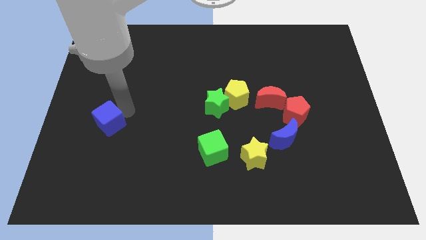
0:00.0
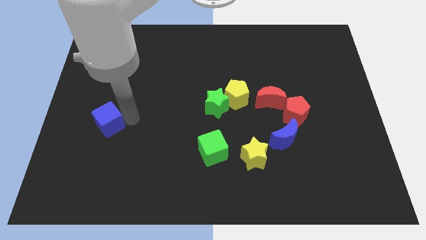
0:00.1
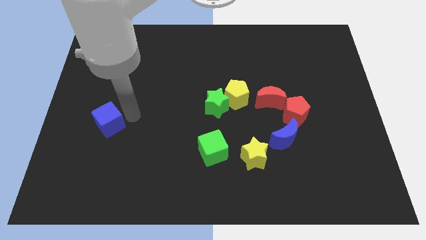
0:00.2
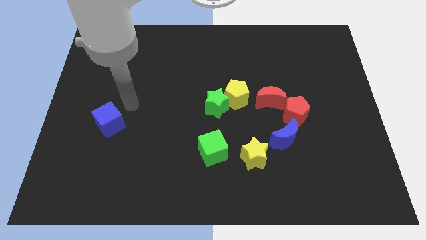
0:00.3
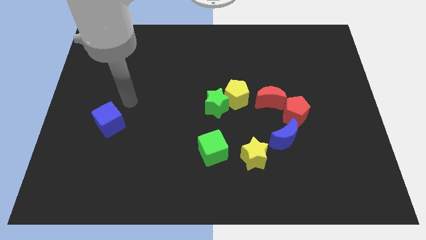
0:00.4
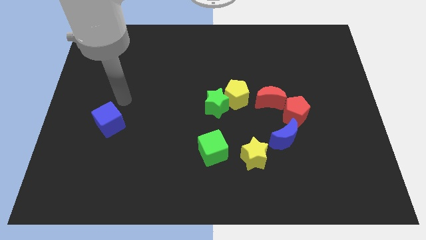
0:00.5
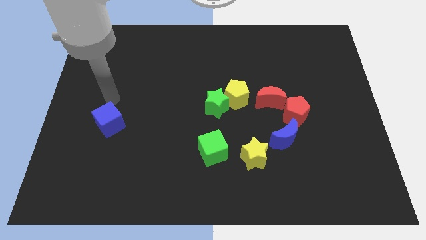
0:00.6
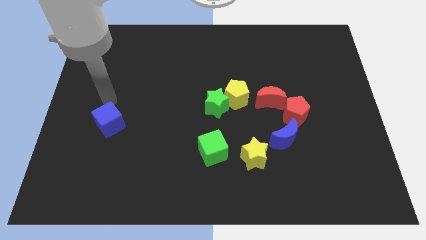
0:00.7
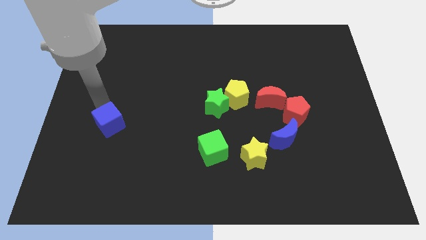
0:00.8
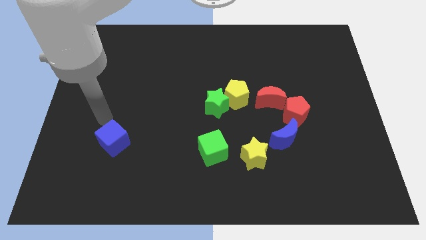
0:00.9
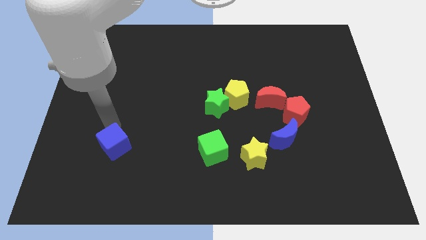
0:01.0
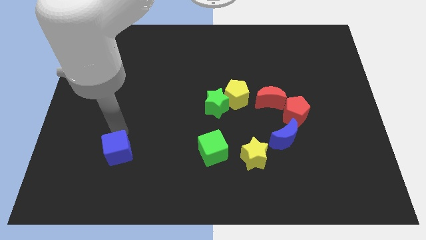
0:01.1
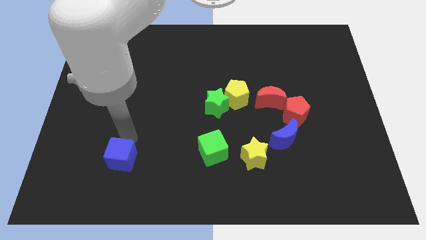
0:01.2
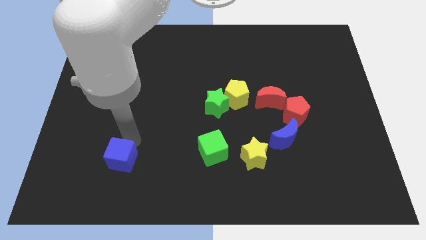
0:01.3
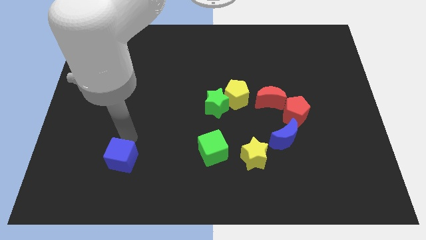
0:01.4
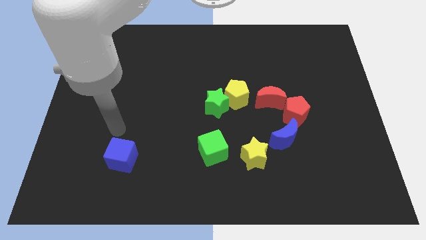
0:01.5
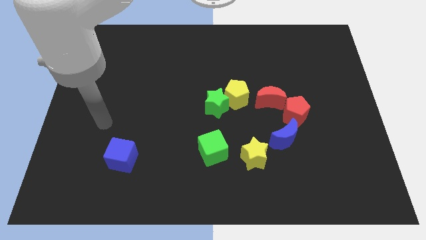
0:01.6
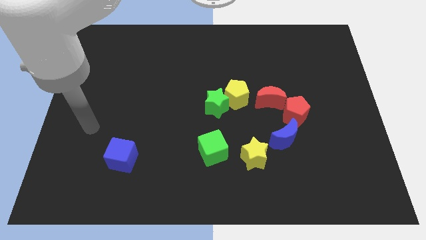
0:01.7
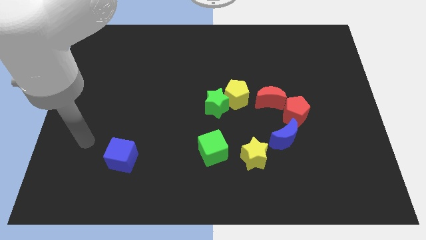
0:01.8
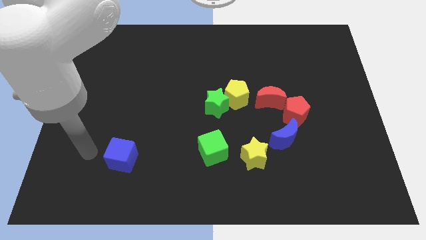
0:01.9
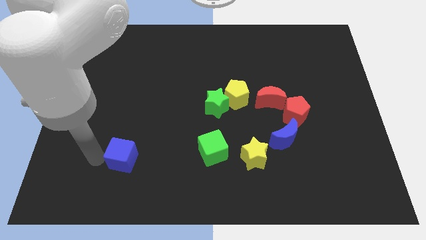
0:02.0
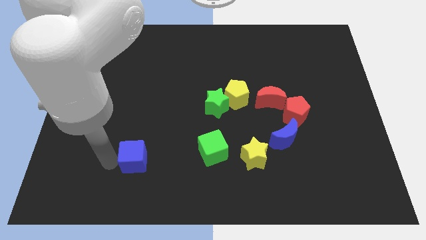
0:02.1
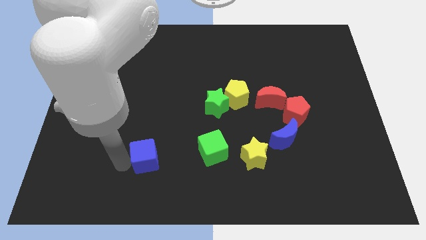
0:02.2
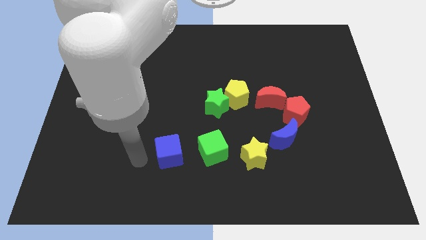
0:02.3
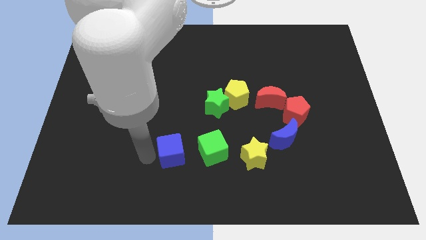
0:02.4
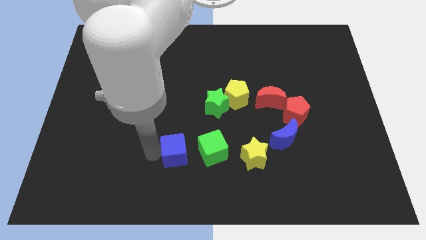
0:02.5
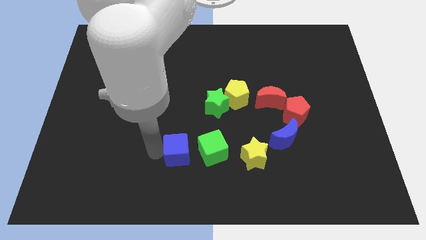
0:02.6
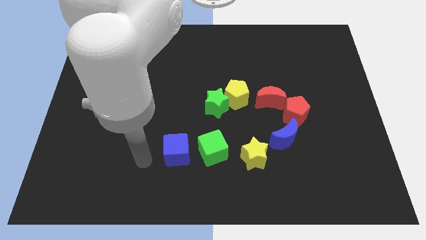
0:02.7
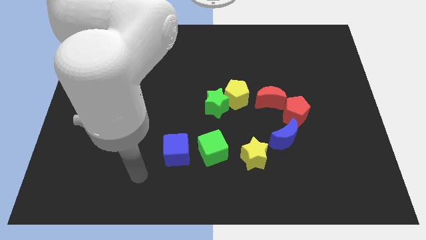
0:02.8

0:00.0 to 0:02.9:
push the blue cube towards left to the green cube

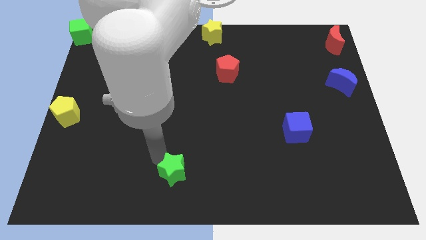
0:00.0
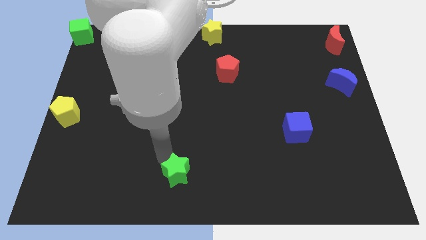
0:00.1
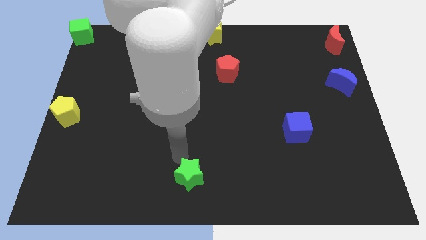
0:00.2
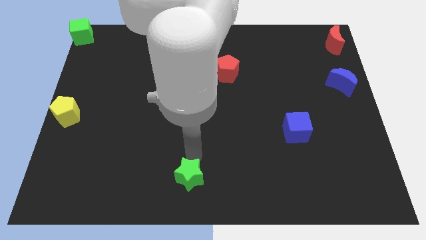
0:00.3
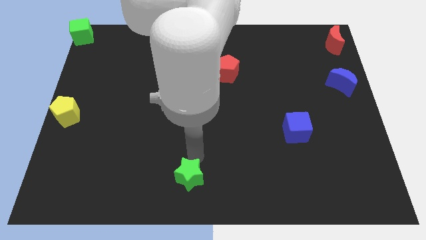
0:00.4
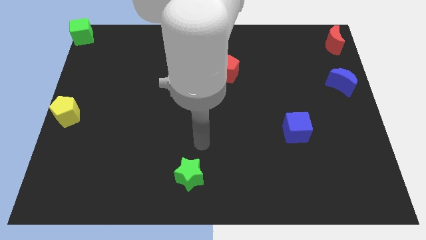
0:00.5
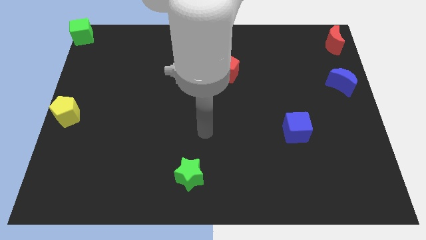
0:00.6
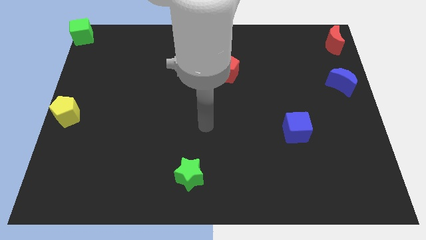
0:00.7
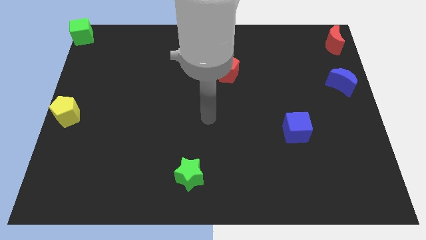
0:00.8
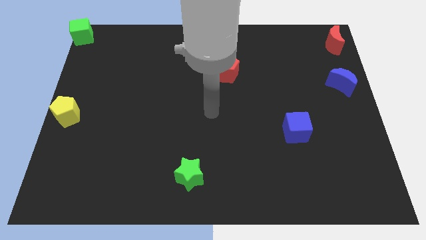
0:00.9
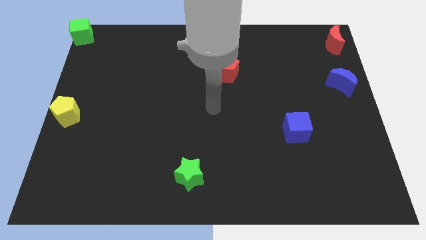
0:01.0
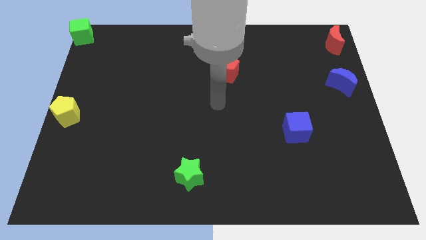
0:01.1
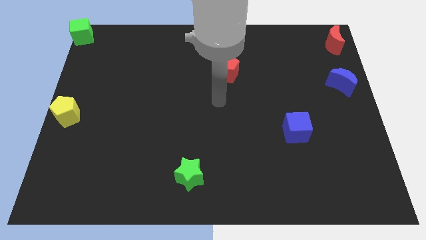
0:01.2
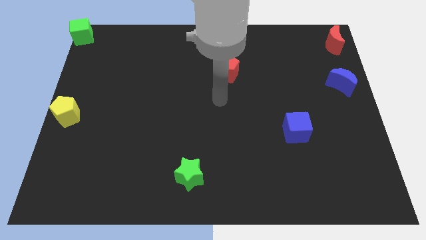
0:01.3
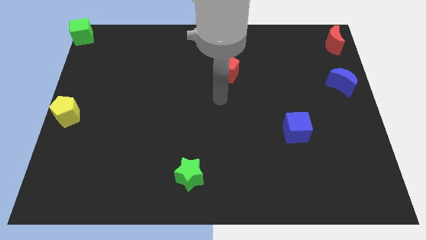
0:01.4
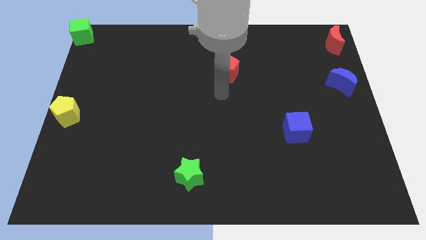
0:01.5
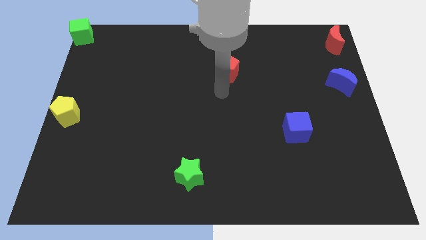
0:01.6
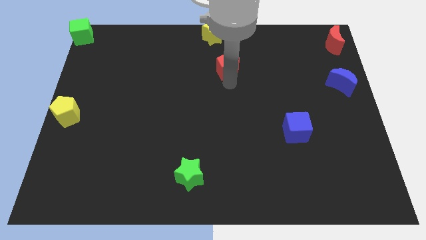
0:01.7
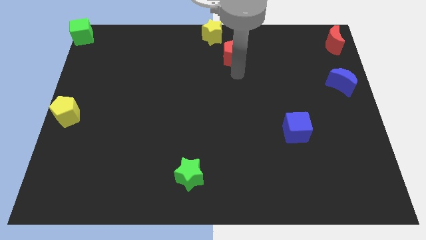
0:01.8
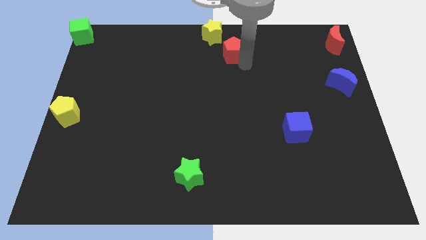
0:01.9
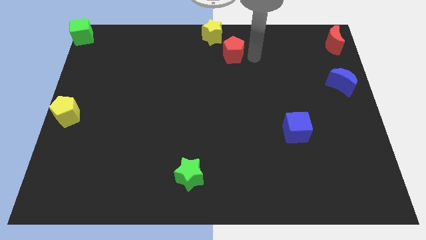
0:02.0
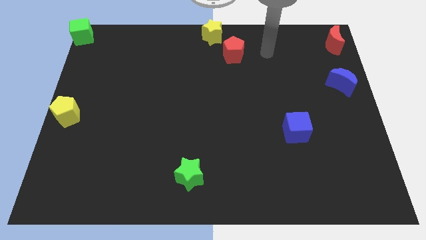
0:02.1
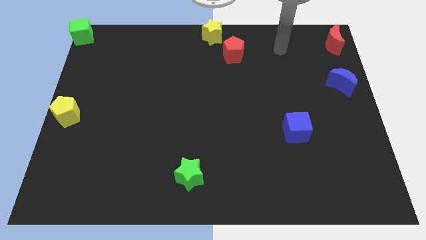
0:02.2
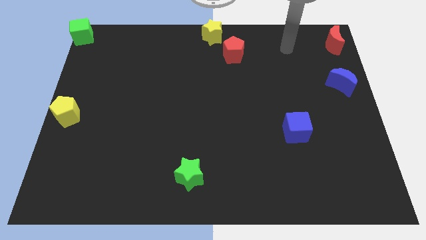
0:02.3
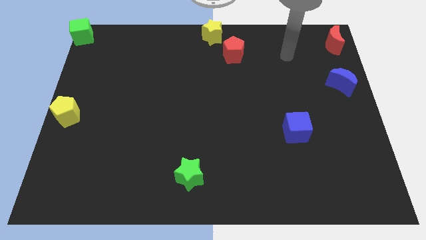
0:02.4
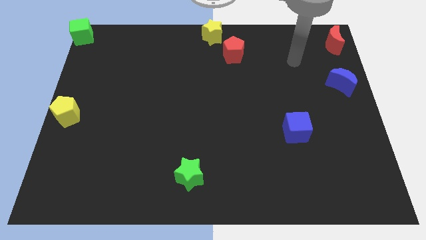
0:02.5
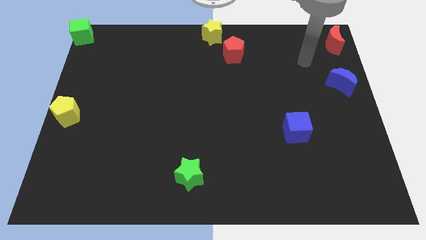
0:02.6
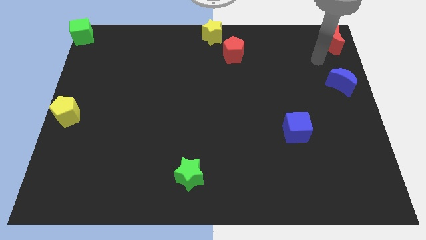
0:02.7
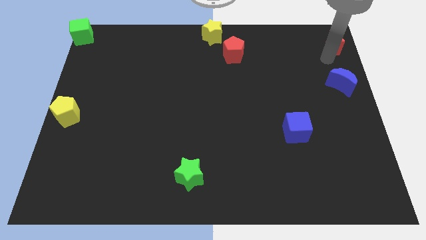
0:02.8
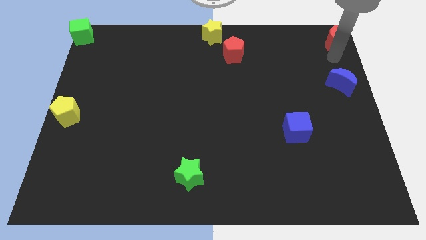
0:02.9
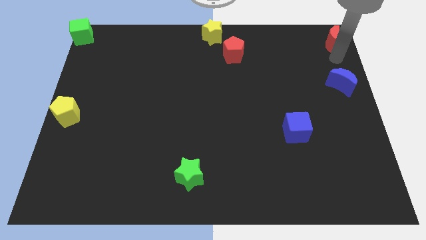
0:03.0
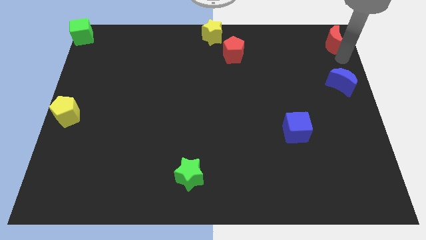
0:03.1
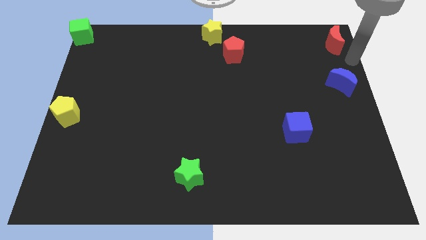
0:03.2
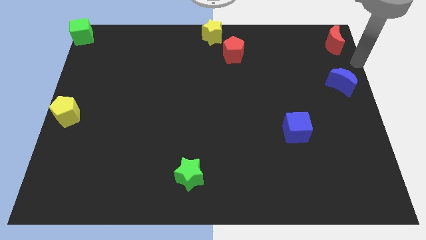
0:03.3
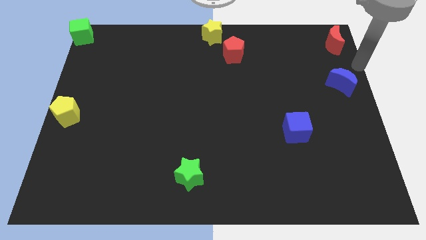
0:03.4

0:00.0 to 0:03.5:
slide the green star and red pentagon to the right side of the board

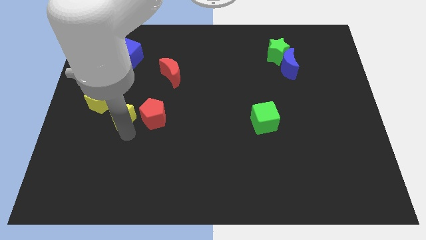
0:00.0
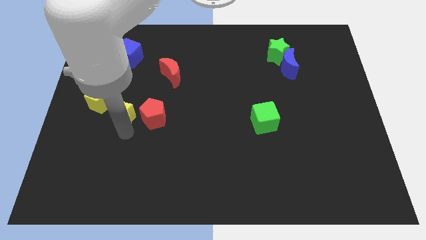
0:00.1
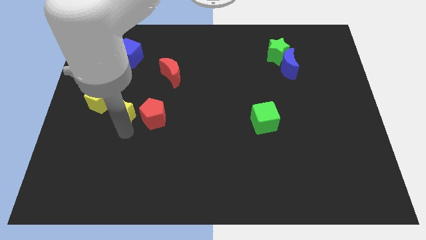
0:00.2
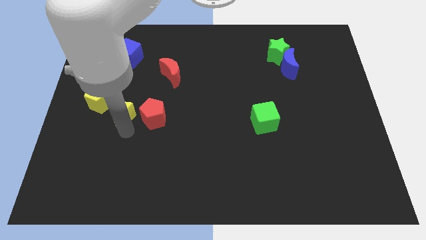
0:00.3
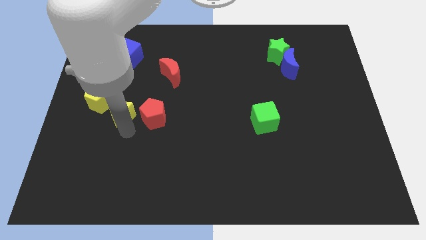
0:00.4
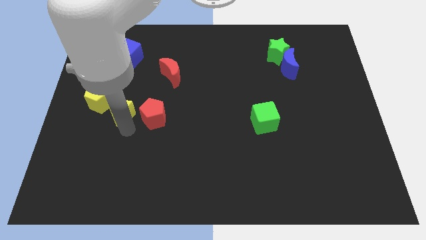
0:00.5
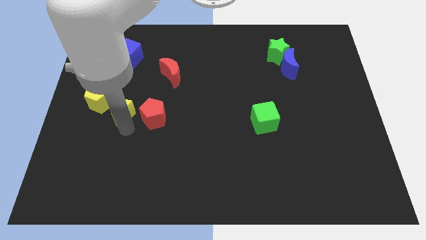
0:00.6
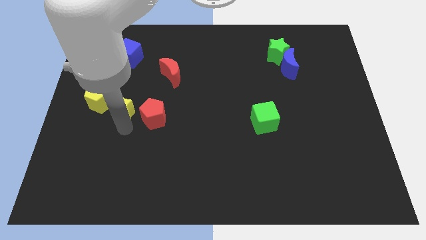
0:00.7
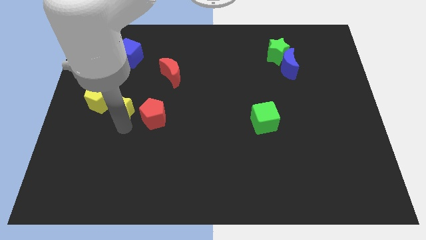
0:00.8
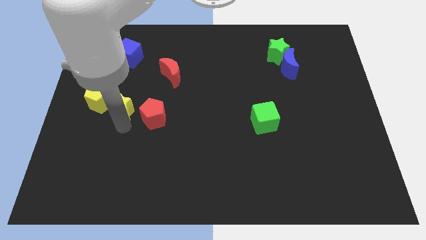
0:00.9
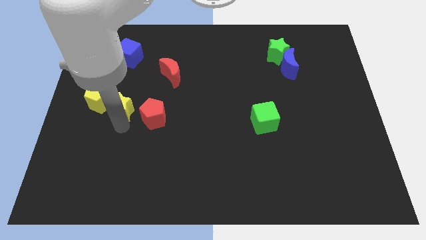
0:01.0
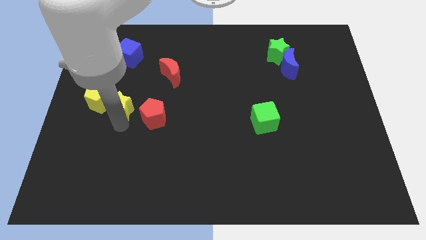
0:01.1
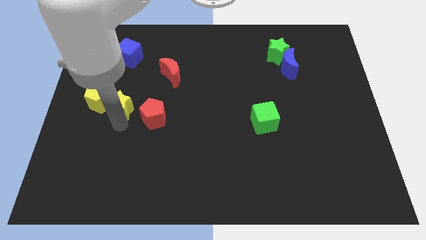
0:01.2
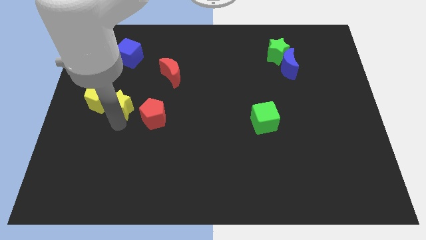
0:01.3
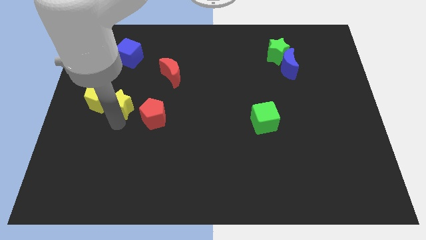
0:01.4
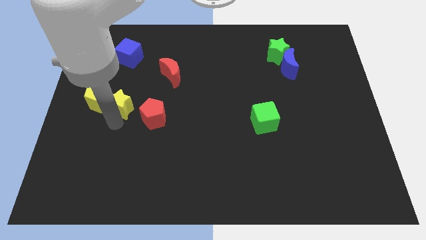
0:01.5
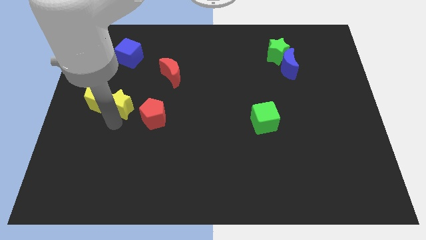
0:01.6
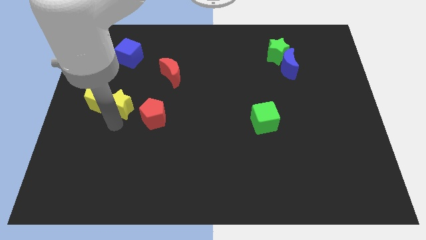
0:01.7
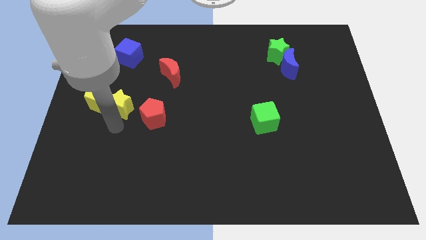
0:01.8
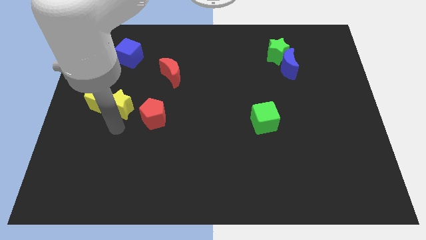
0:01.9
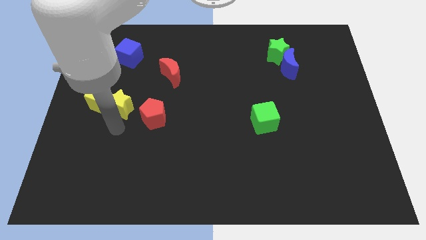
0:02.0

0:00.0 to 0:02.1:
place yellow star to the right of yellow pentagon

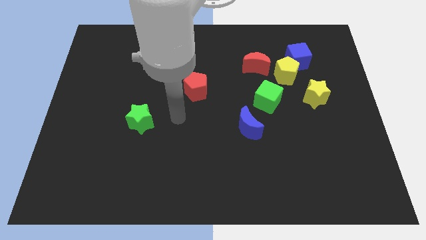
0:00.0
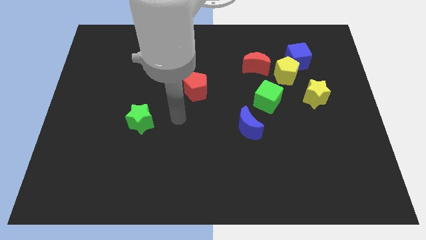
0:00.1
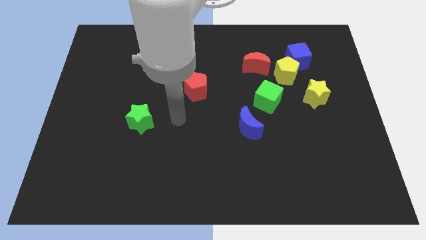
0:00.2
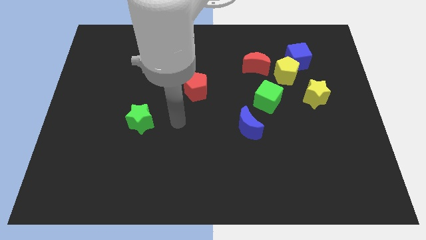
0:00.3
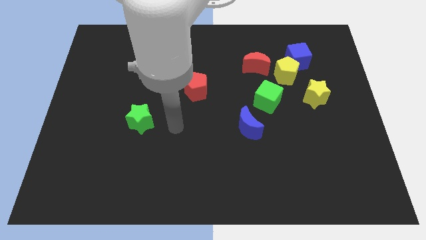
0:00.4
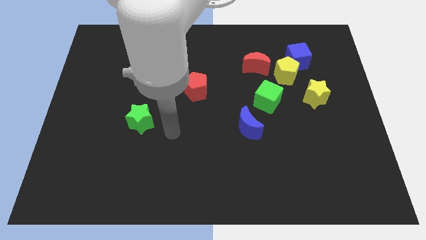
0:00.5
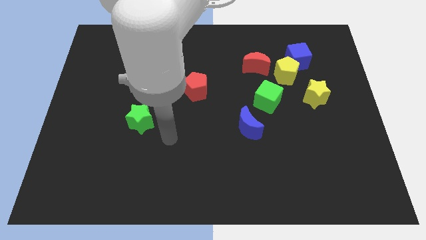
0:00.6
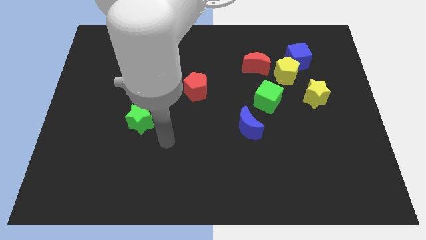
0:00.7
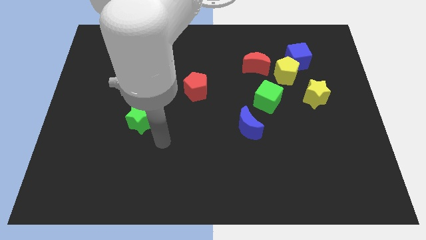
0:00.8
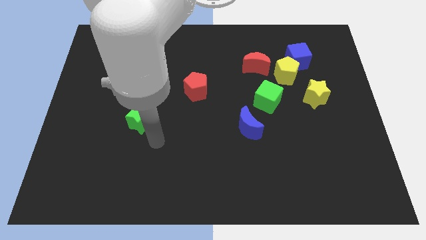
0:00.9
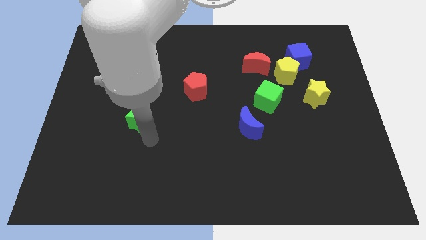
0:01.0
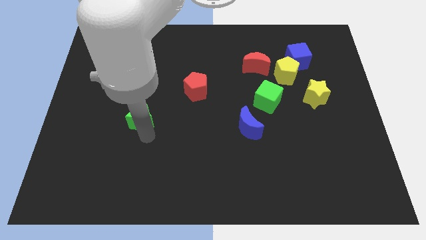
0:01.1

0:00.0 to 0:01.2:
place your hand below the green star
